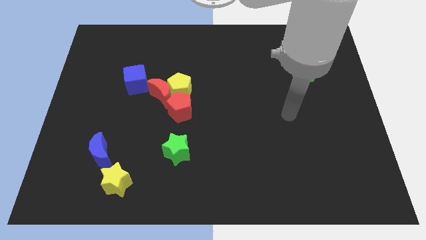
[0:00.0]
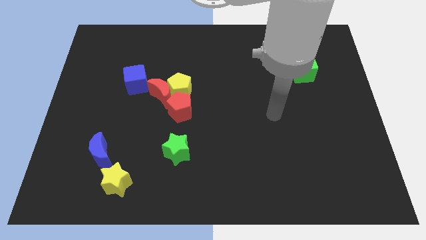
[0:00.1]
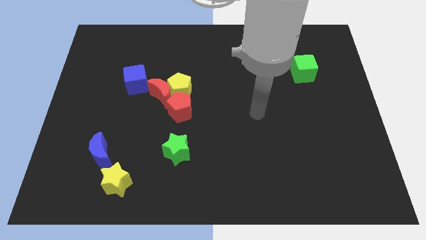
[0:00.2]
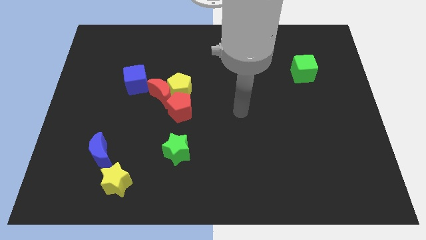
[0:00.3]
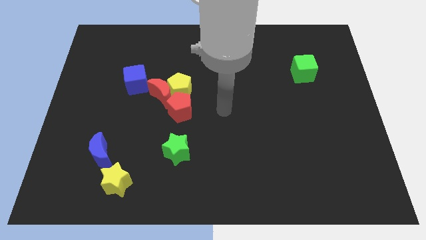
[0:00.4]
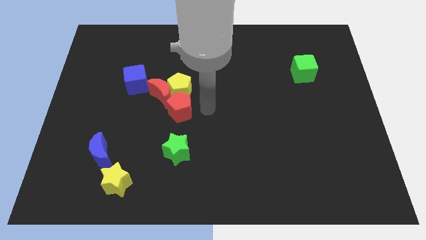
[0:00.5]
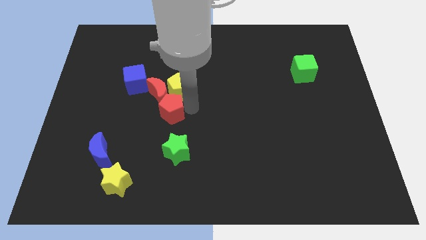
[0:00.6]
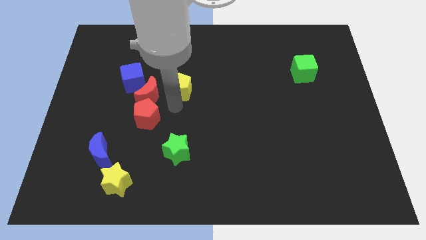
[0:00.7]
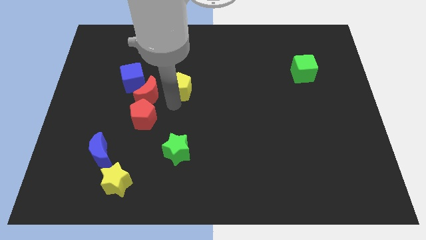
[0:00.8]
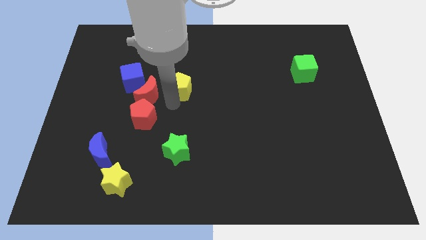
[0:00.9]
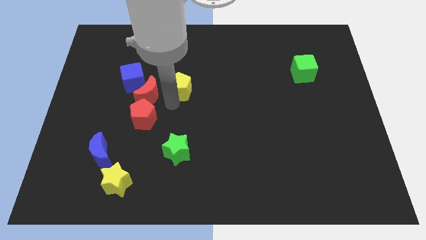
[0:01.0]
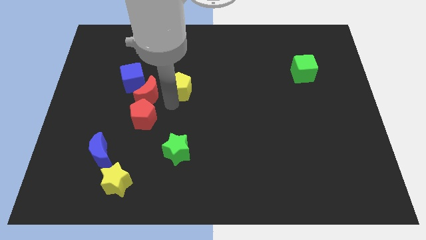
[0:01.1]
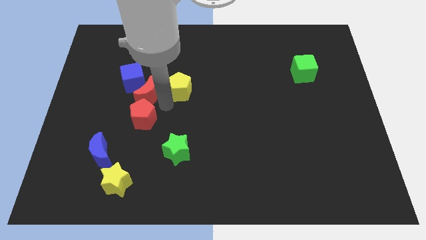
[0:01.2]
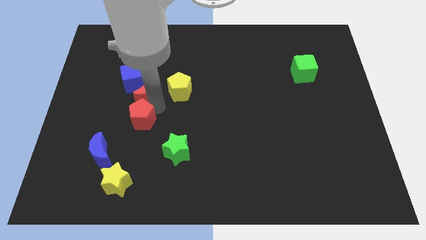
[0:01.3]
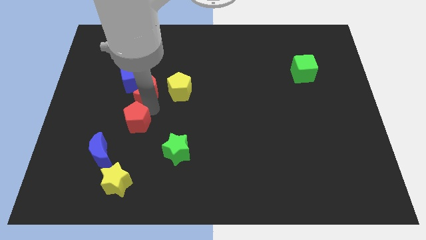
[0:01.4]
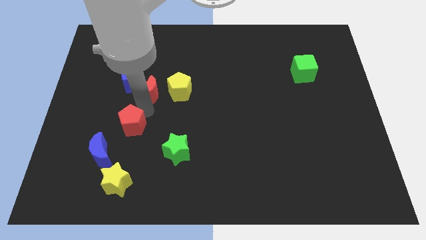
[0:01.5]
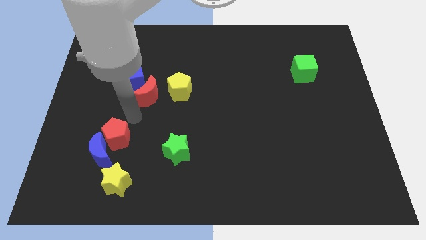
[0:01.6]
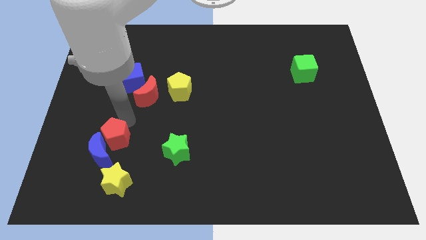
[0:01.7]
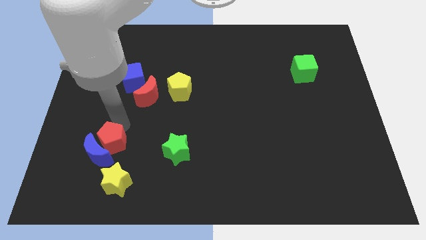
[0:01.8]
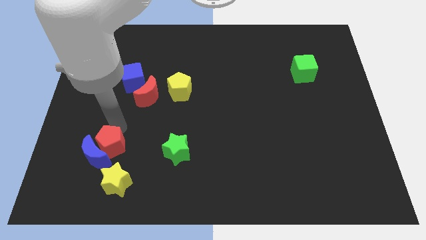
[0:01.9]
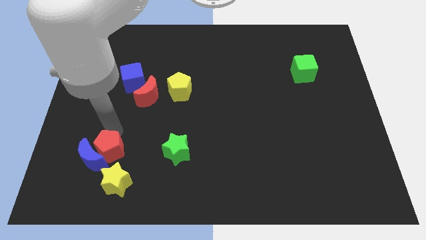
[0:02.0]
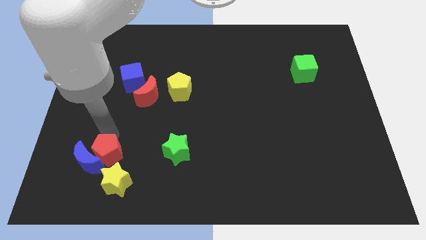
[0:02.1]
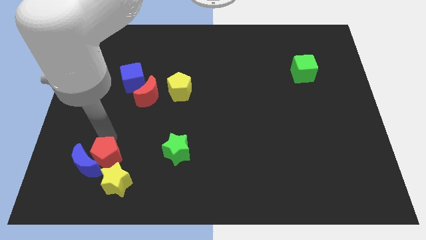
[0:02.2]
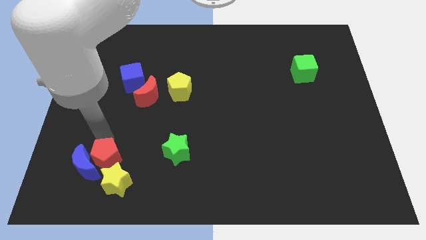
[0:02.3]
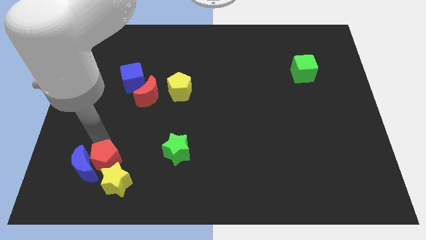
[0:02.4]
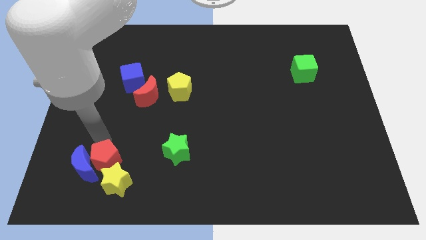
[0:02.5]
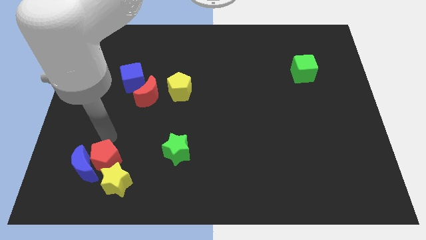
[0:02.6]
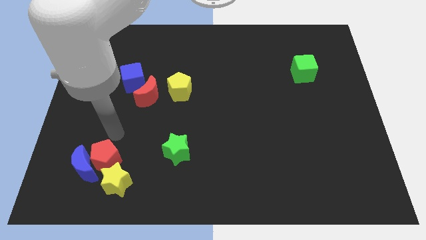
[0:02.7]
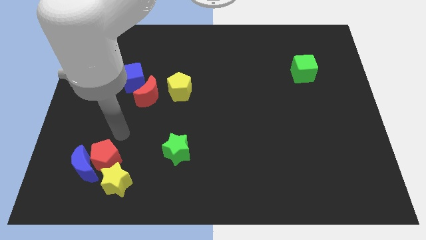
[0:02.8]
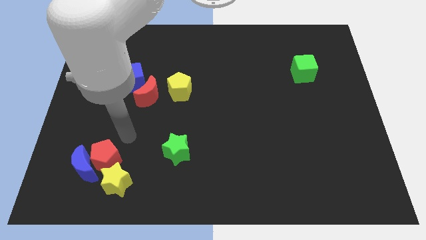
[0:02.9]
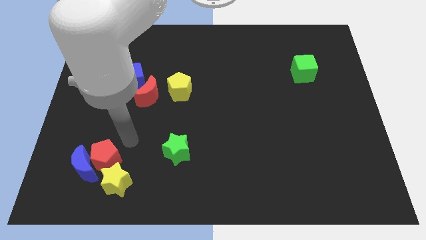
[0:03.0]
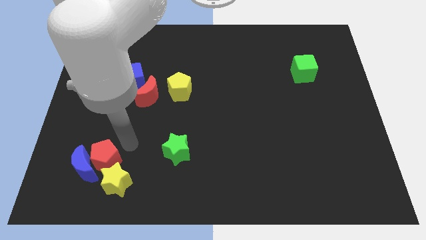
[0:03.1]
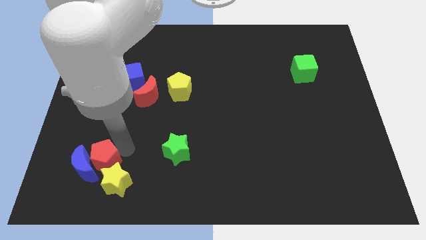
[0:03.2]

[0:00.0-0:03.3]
push red pentagon in blue moon

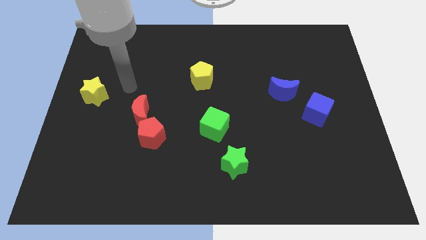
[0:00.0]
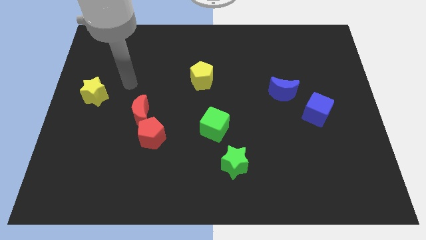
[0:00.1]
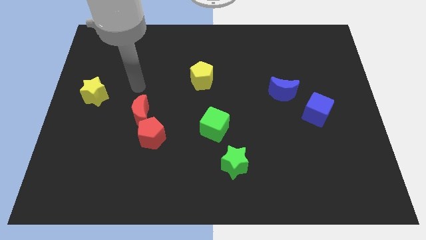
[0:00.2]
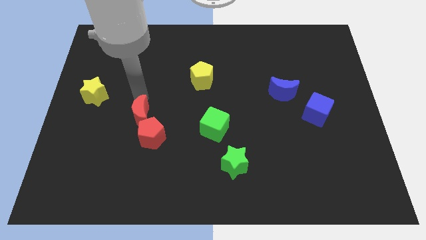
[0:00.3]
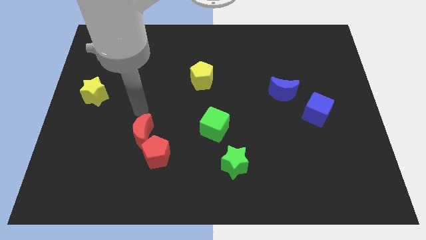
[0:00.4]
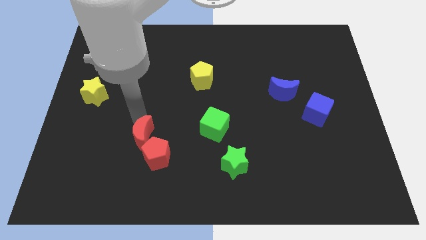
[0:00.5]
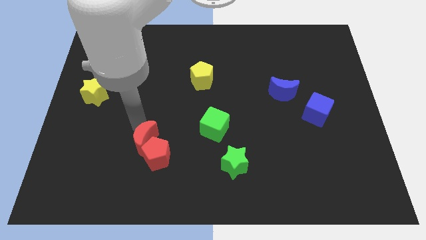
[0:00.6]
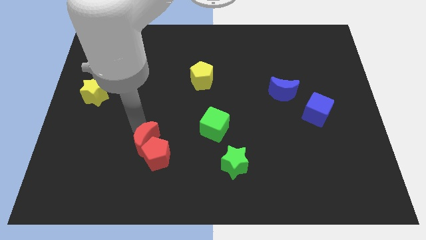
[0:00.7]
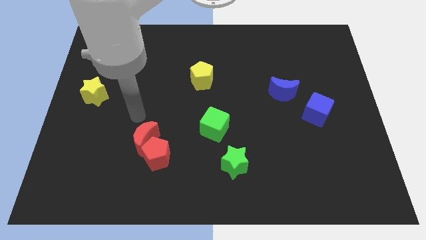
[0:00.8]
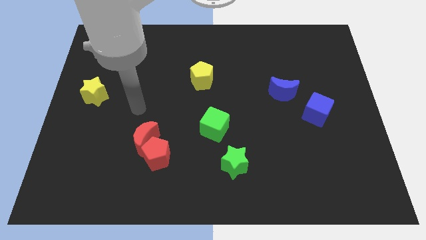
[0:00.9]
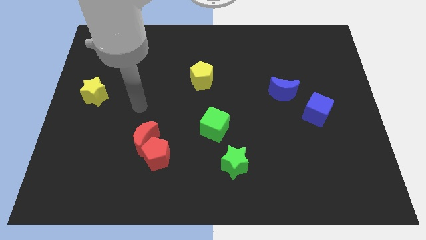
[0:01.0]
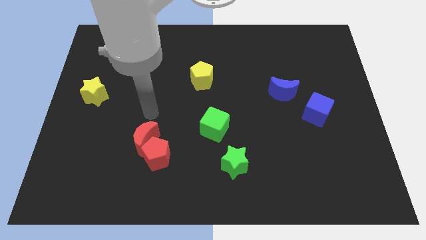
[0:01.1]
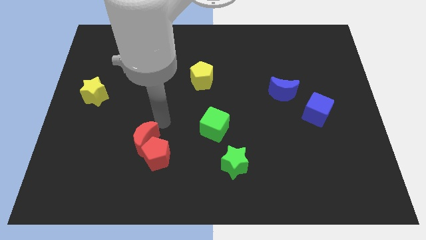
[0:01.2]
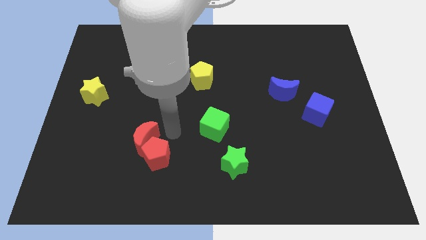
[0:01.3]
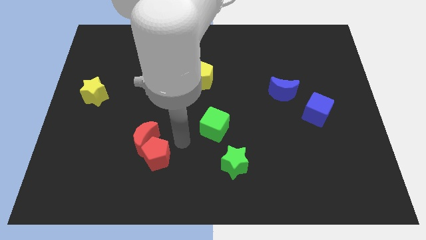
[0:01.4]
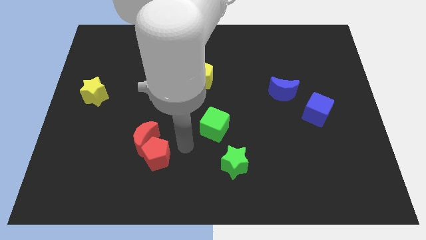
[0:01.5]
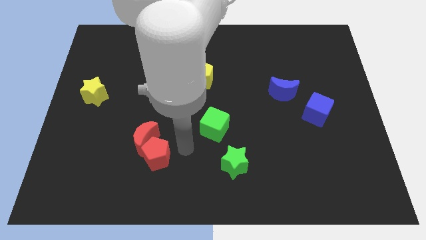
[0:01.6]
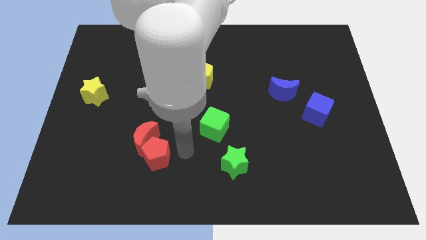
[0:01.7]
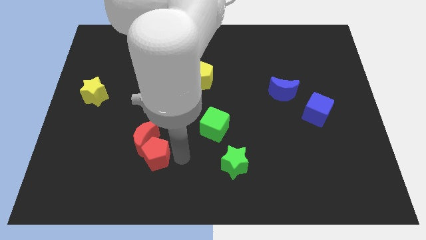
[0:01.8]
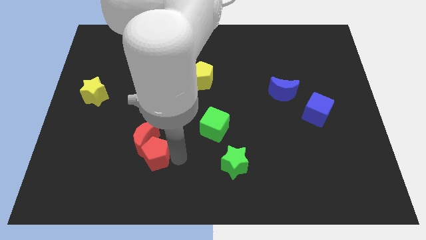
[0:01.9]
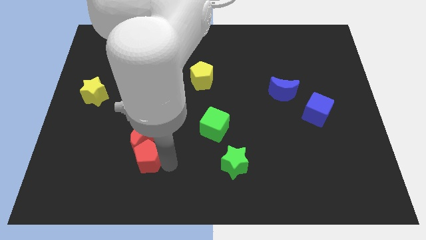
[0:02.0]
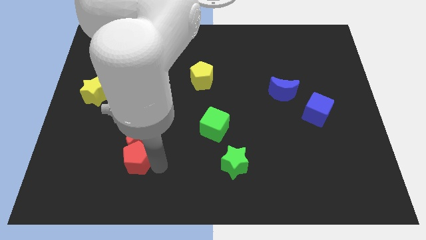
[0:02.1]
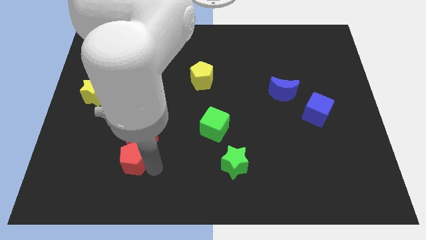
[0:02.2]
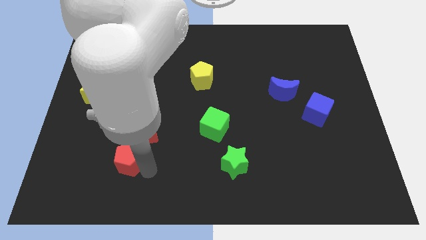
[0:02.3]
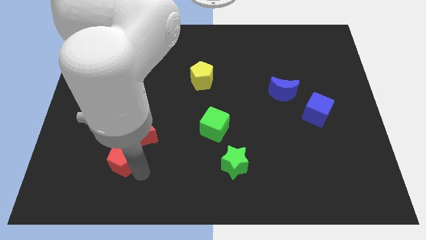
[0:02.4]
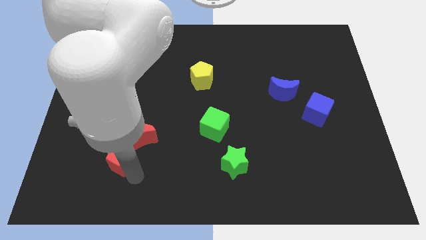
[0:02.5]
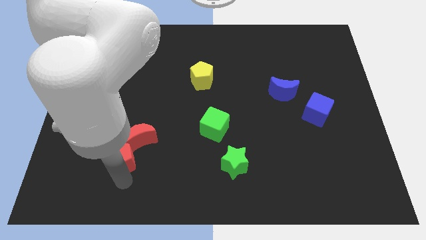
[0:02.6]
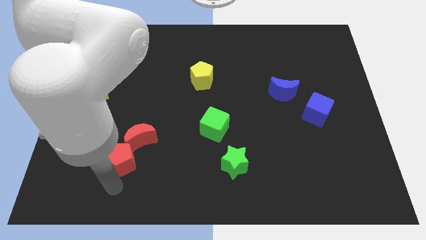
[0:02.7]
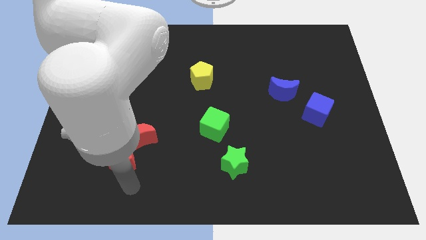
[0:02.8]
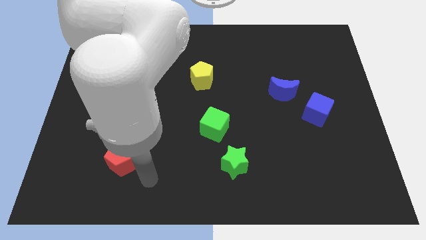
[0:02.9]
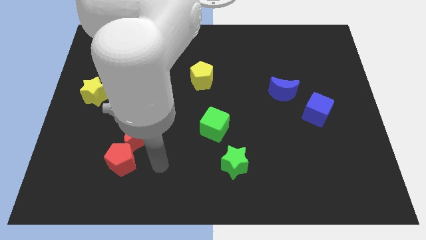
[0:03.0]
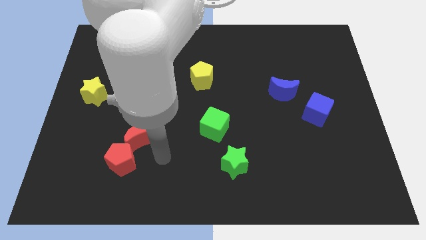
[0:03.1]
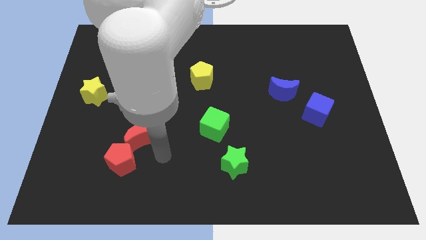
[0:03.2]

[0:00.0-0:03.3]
move the red pentagon slightly to the left

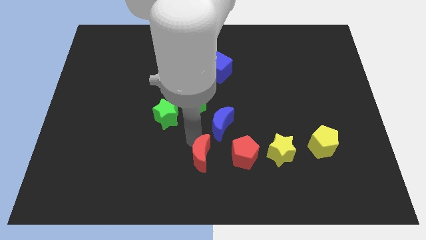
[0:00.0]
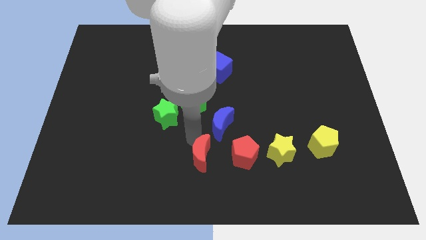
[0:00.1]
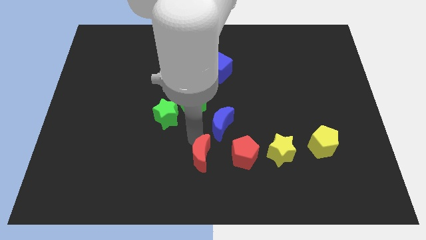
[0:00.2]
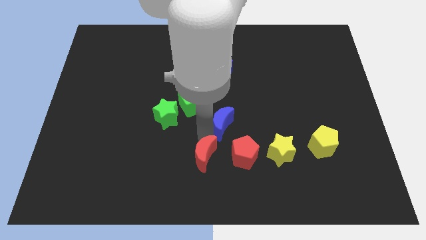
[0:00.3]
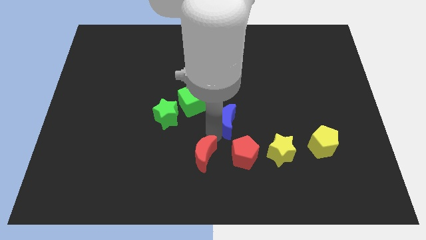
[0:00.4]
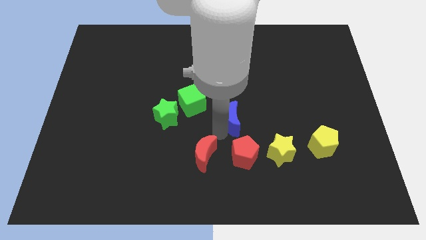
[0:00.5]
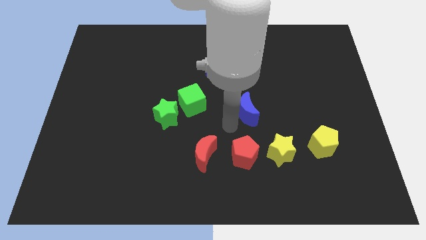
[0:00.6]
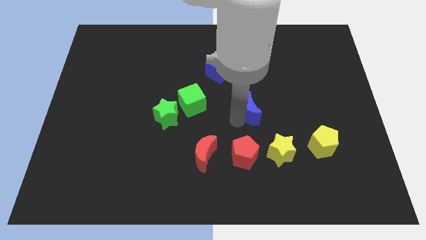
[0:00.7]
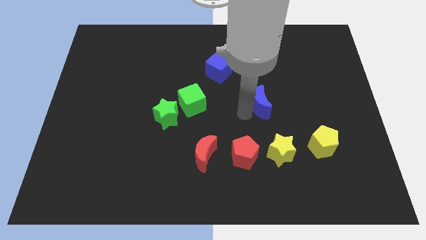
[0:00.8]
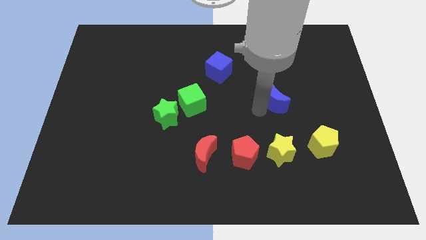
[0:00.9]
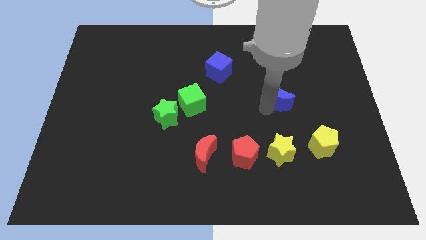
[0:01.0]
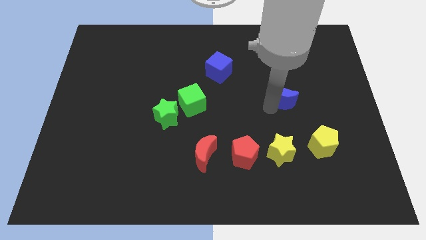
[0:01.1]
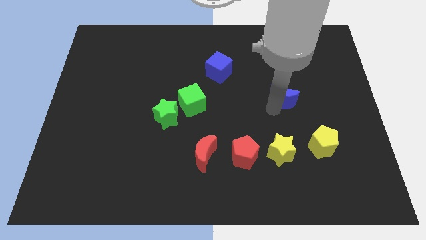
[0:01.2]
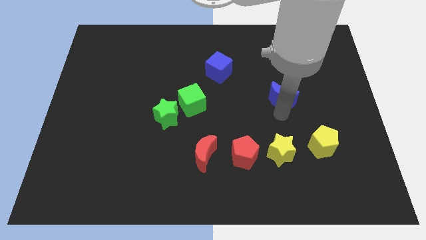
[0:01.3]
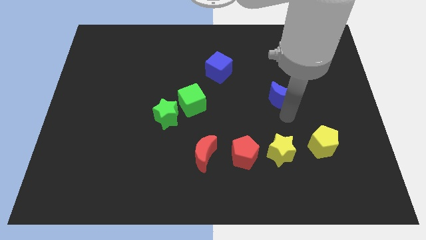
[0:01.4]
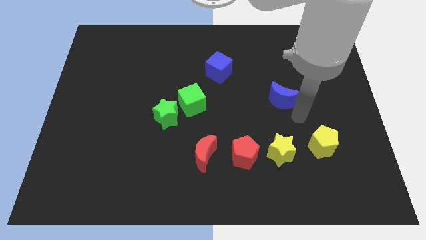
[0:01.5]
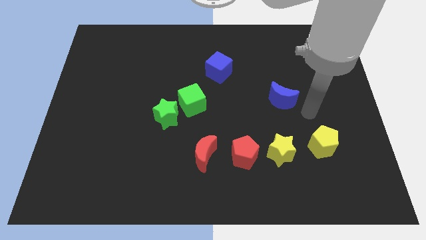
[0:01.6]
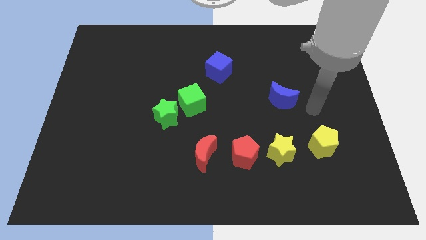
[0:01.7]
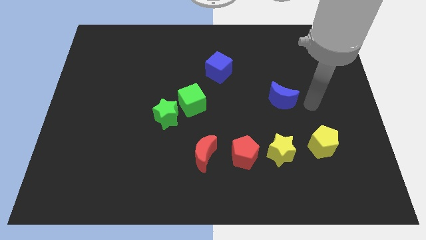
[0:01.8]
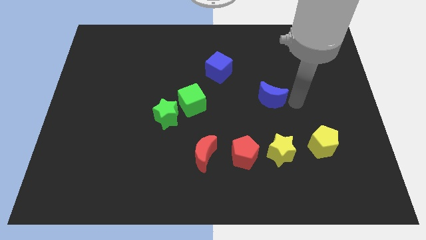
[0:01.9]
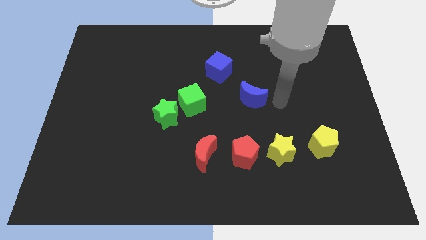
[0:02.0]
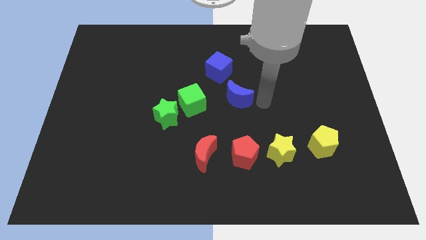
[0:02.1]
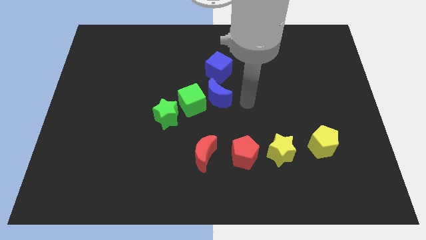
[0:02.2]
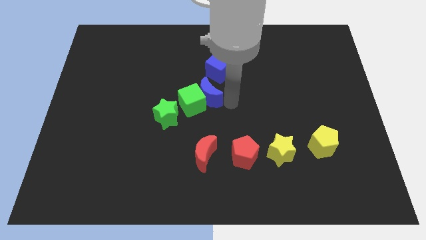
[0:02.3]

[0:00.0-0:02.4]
place the blue moon at the center of the board
